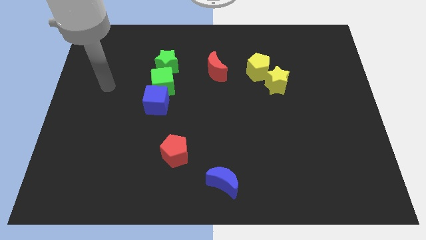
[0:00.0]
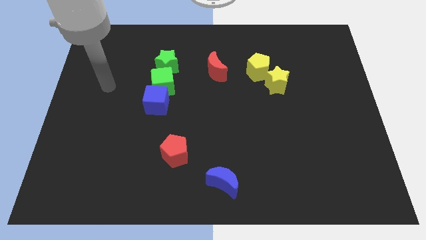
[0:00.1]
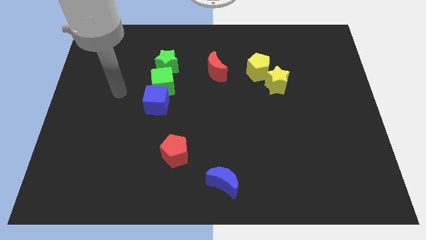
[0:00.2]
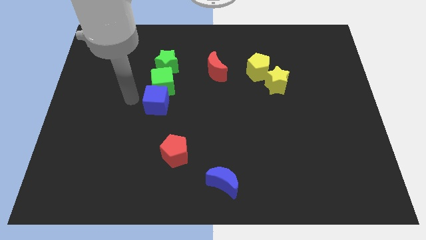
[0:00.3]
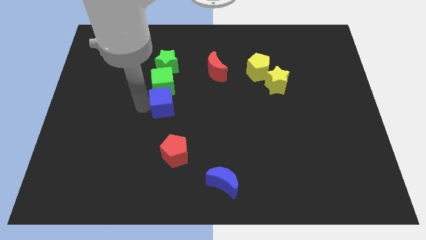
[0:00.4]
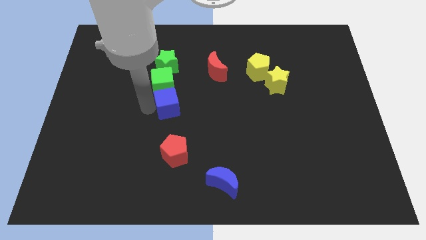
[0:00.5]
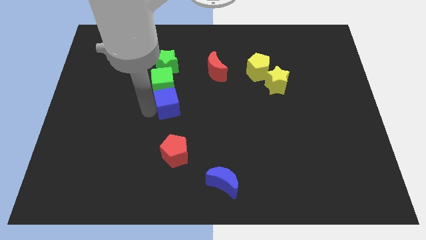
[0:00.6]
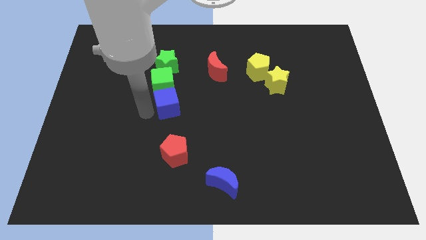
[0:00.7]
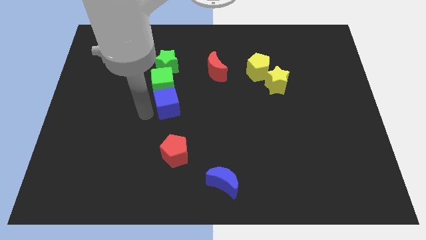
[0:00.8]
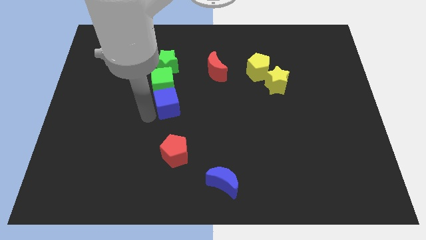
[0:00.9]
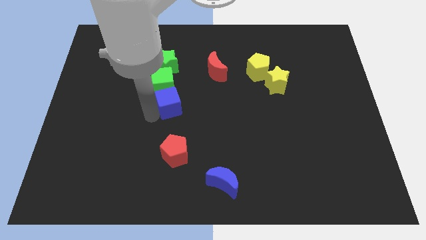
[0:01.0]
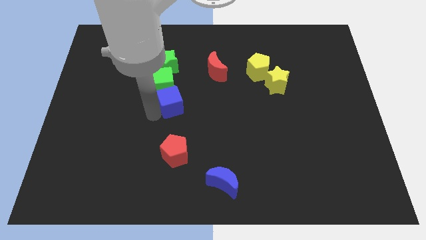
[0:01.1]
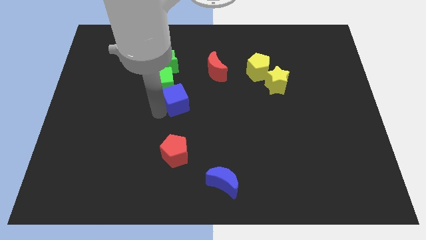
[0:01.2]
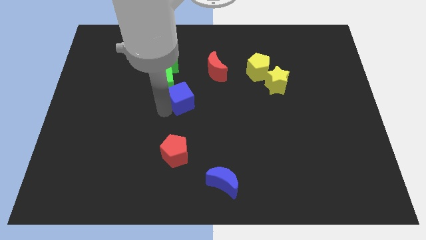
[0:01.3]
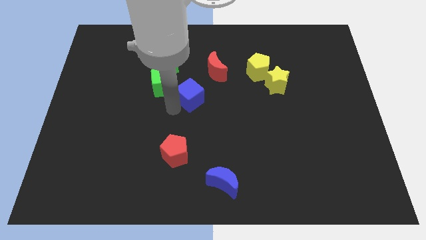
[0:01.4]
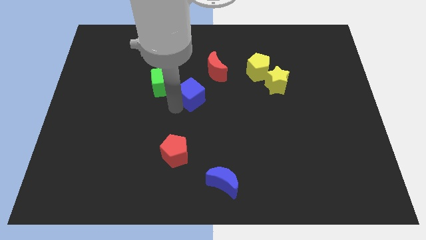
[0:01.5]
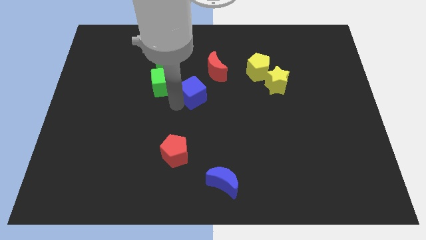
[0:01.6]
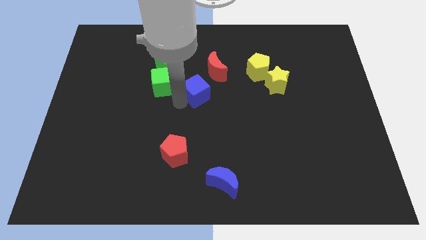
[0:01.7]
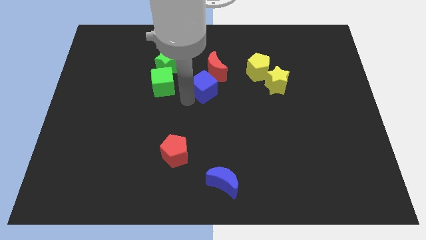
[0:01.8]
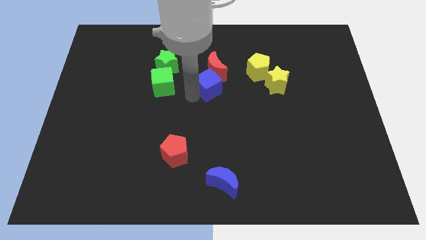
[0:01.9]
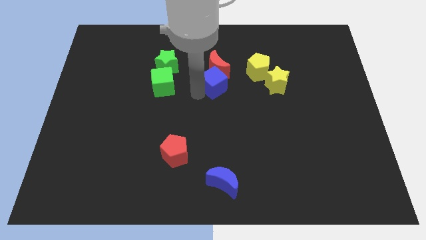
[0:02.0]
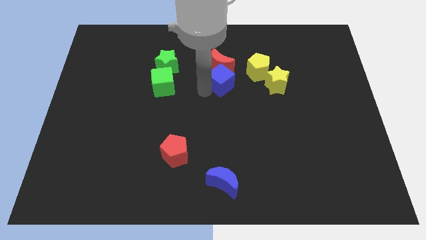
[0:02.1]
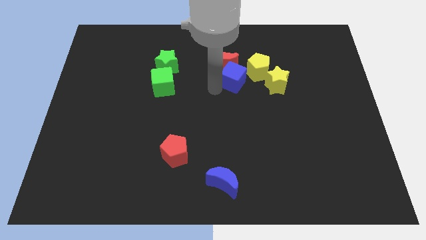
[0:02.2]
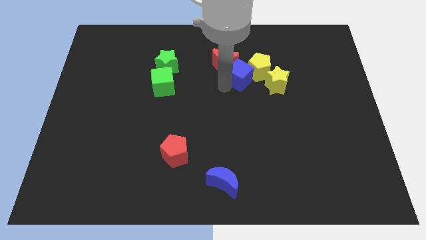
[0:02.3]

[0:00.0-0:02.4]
move the blue cube towards the bottom of red moon and yellow pentagon

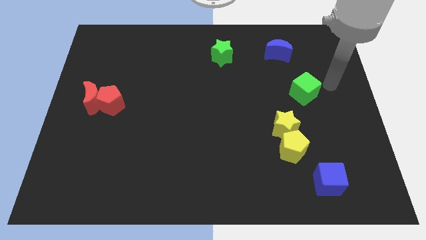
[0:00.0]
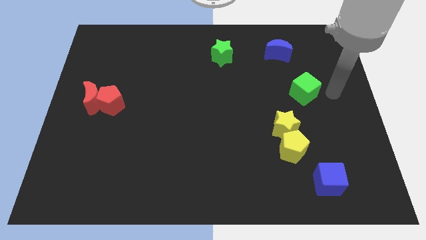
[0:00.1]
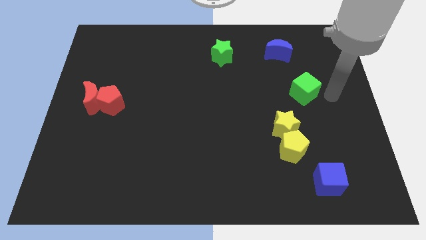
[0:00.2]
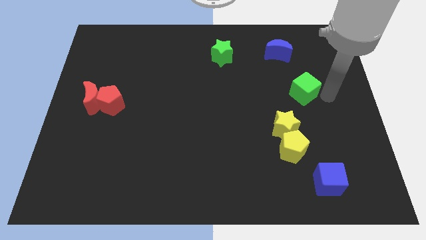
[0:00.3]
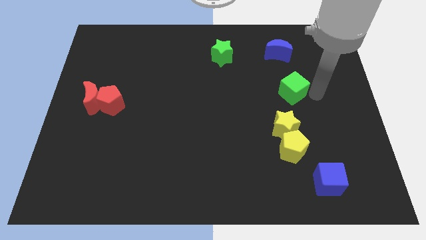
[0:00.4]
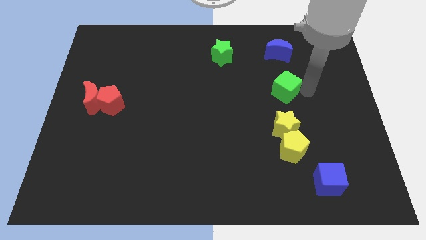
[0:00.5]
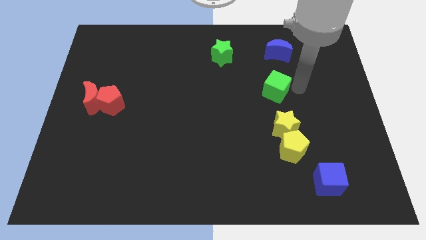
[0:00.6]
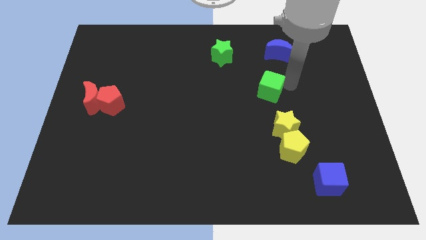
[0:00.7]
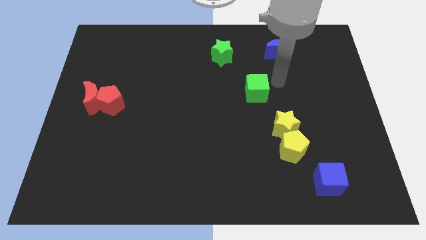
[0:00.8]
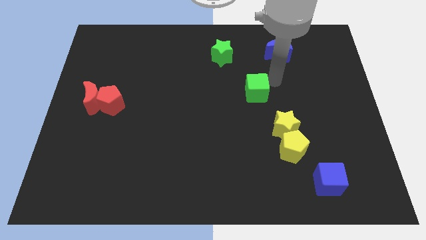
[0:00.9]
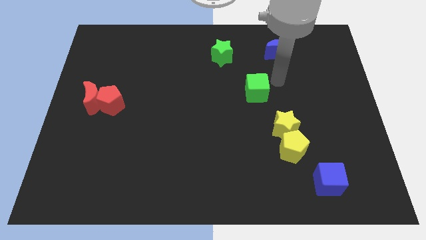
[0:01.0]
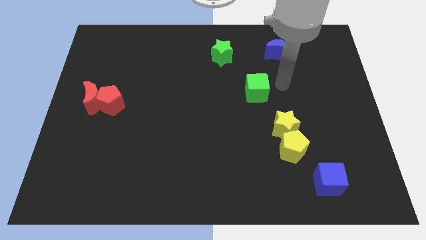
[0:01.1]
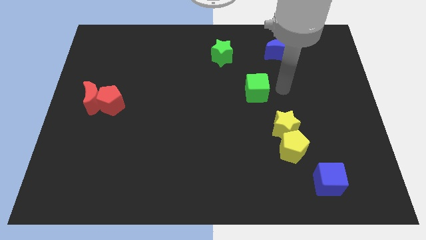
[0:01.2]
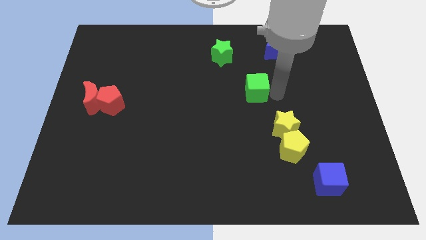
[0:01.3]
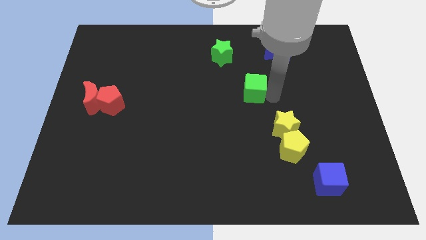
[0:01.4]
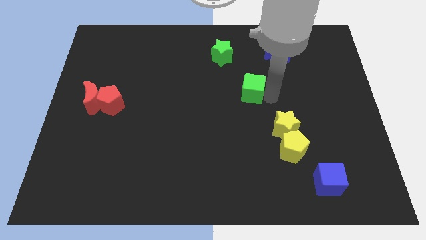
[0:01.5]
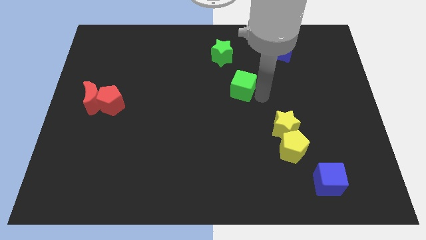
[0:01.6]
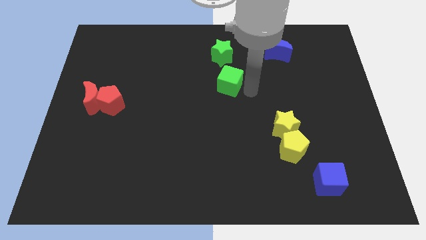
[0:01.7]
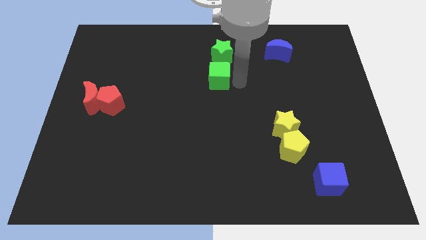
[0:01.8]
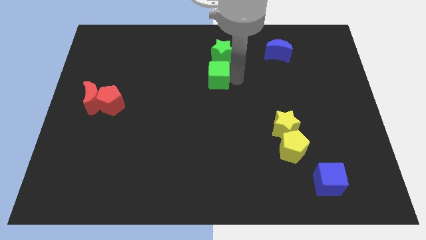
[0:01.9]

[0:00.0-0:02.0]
place the green cube under the green star

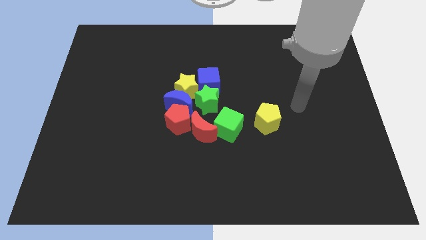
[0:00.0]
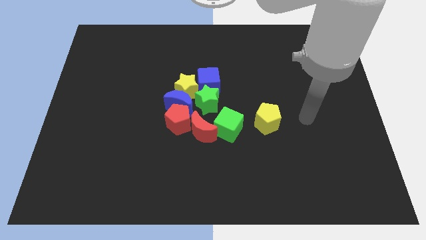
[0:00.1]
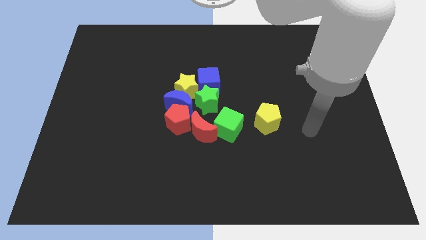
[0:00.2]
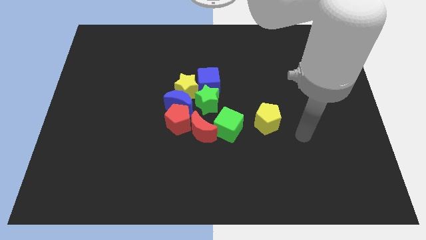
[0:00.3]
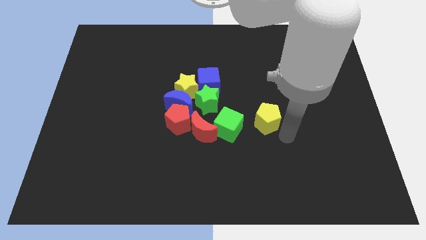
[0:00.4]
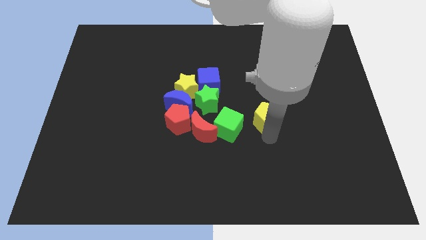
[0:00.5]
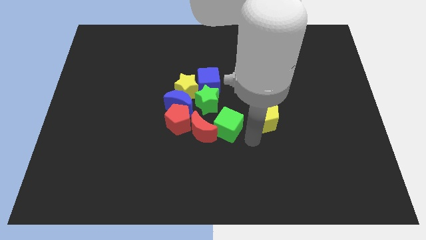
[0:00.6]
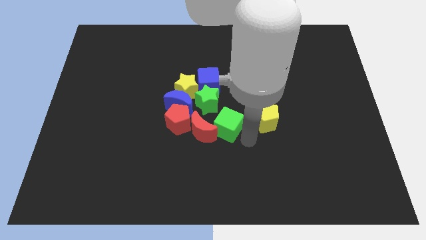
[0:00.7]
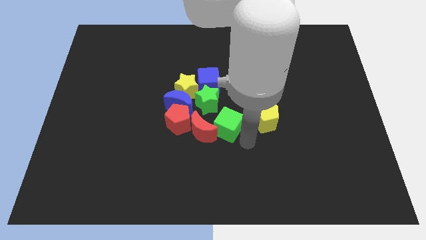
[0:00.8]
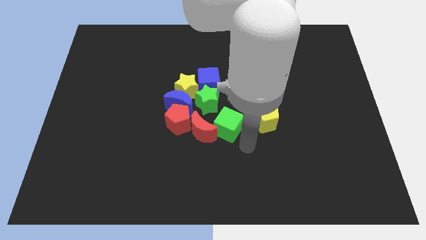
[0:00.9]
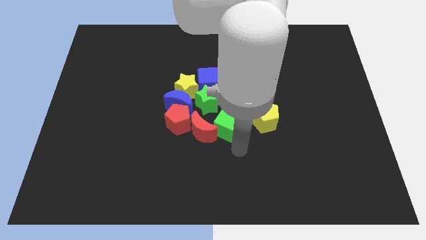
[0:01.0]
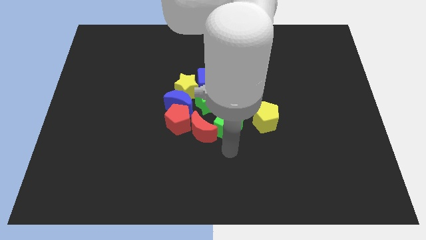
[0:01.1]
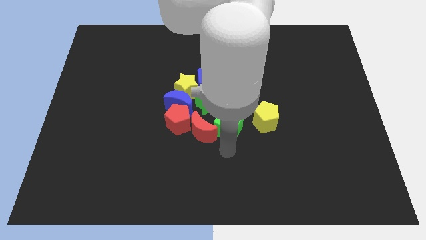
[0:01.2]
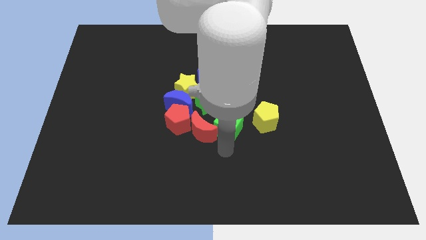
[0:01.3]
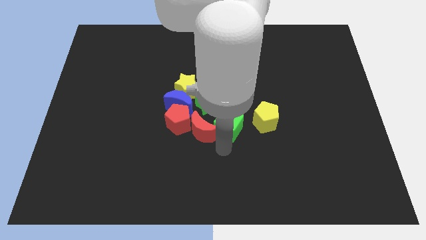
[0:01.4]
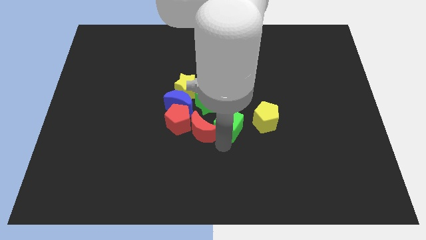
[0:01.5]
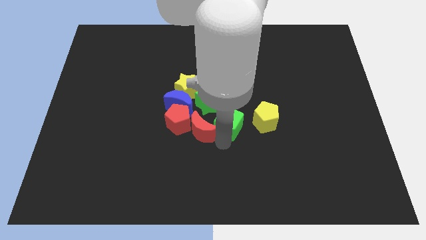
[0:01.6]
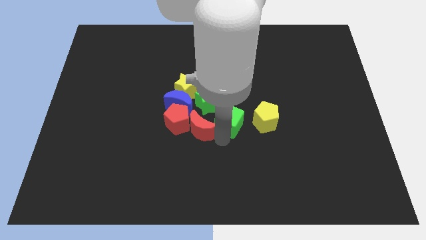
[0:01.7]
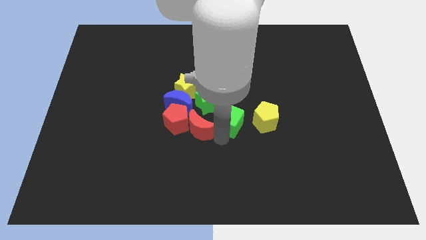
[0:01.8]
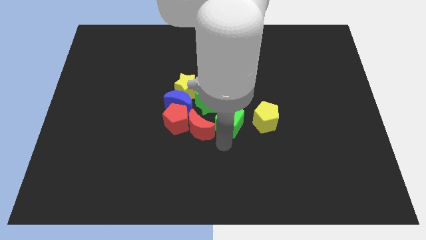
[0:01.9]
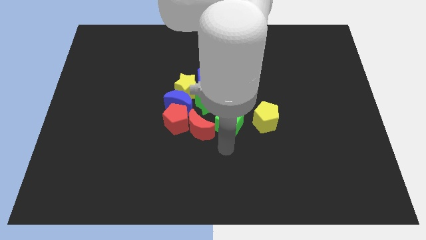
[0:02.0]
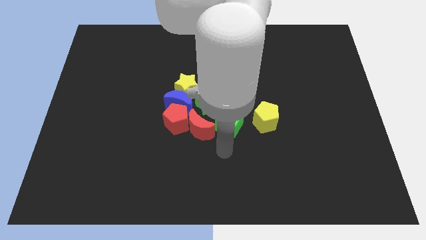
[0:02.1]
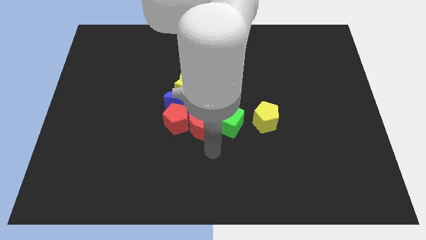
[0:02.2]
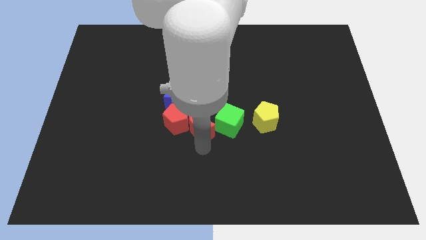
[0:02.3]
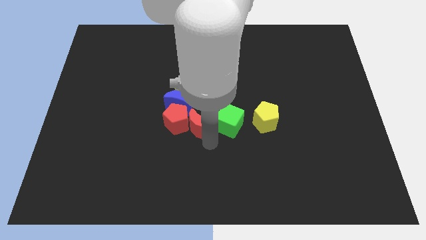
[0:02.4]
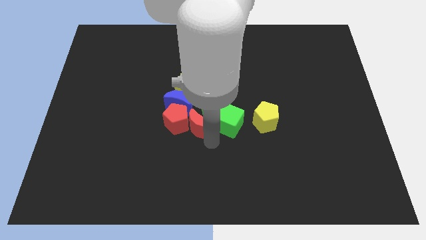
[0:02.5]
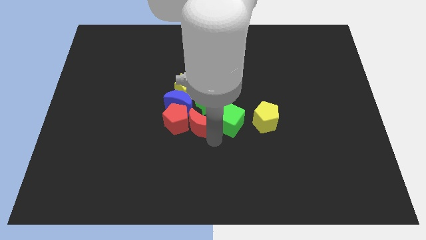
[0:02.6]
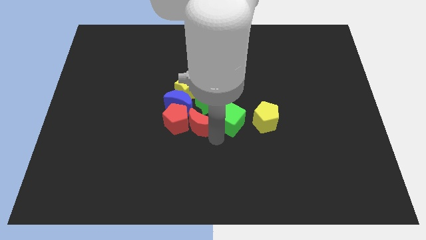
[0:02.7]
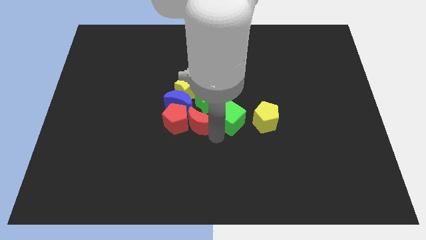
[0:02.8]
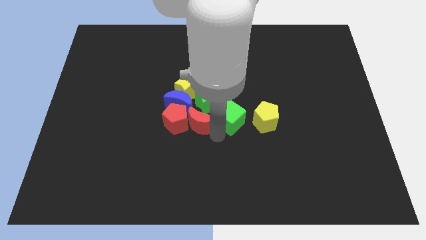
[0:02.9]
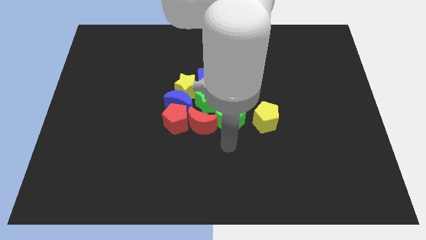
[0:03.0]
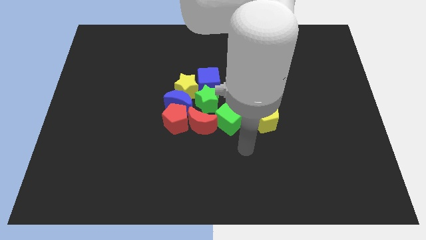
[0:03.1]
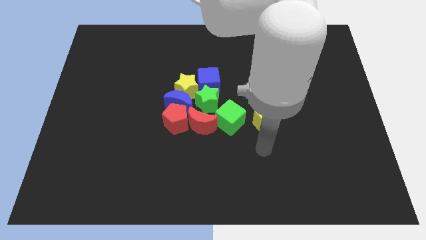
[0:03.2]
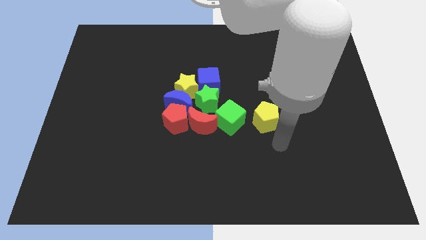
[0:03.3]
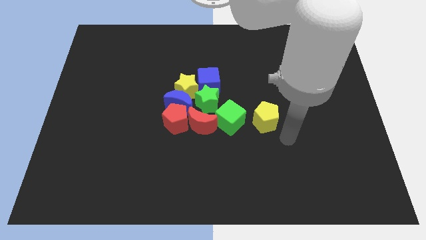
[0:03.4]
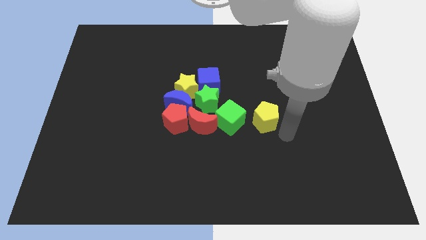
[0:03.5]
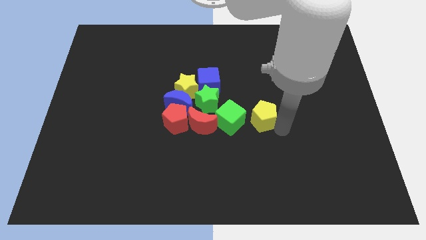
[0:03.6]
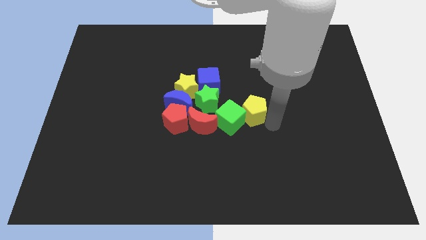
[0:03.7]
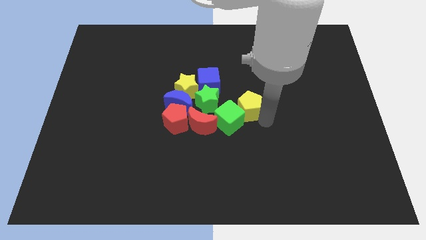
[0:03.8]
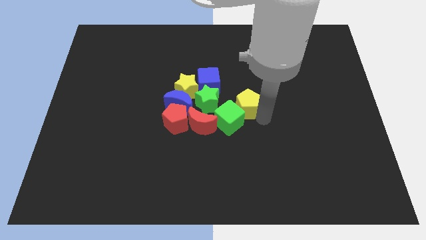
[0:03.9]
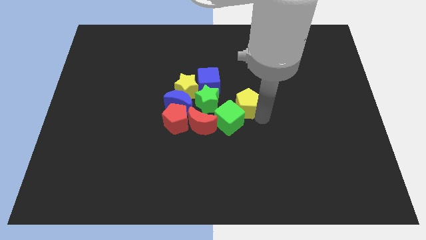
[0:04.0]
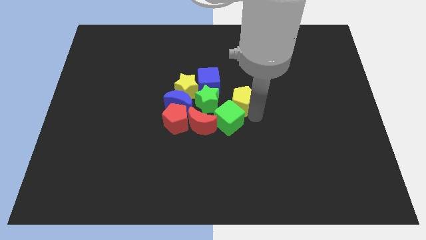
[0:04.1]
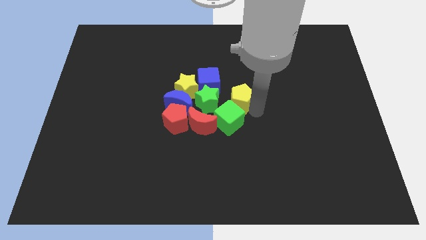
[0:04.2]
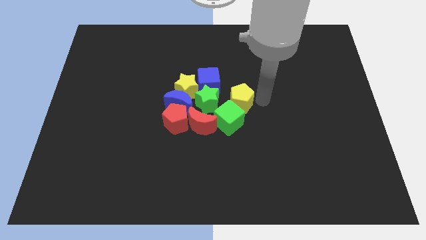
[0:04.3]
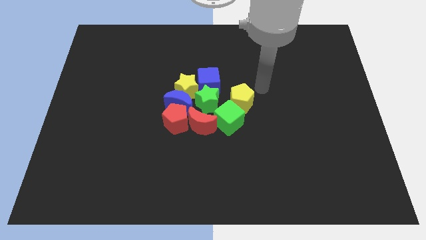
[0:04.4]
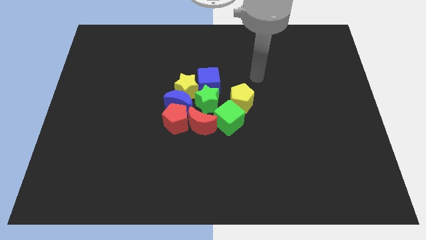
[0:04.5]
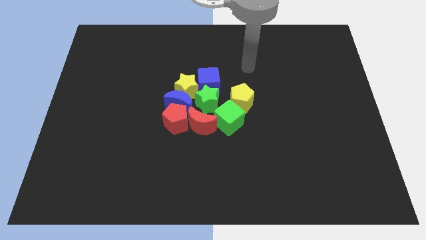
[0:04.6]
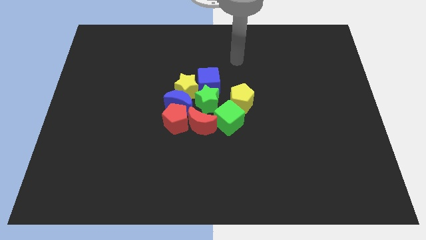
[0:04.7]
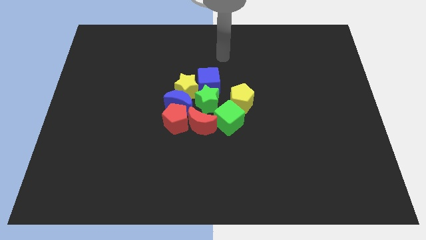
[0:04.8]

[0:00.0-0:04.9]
push the green cube slightly upwards
